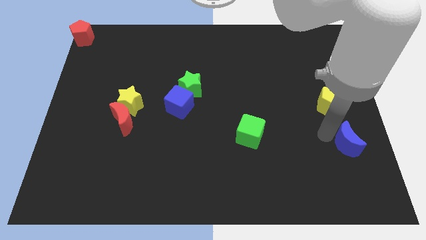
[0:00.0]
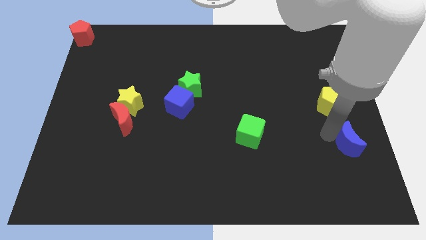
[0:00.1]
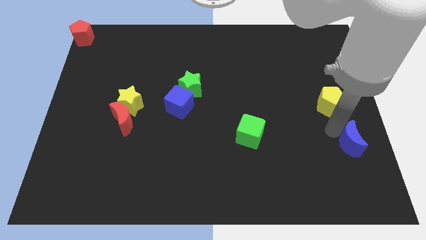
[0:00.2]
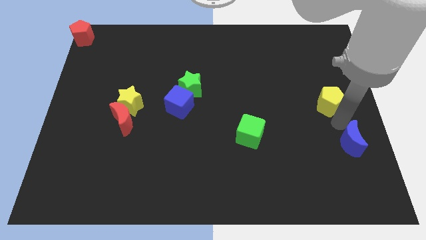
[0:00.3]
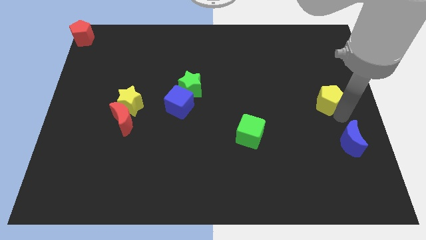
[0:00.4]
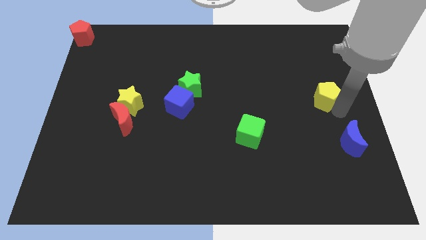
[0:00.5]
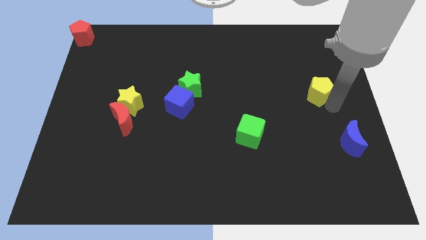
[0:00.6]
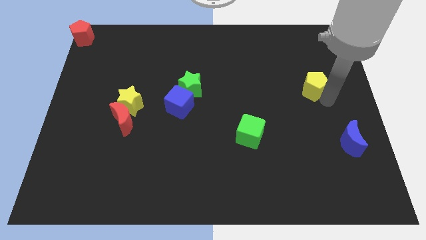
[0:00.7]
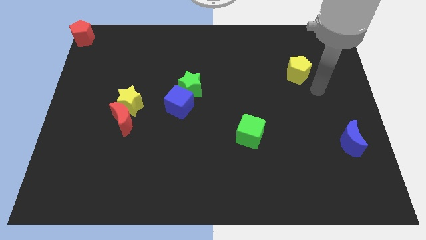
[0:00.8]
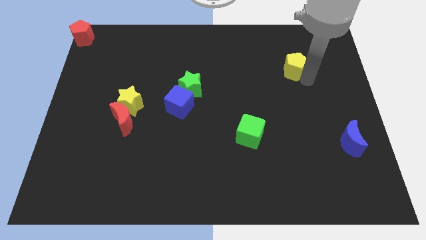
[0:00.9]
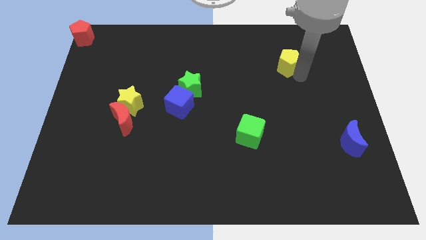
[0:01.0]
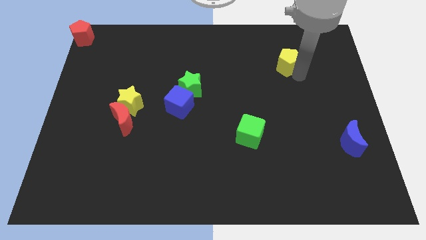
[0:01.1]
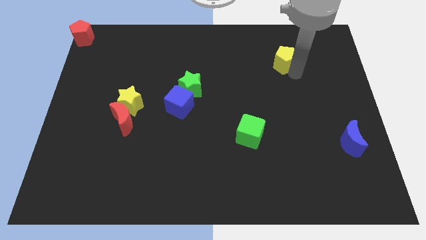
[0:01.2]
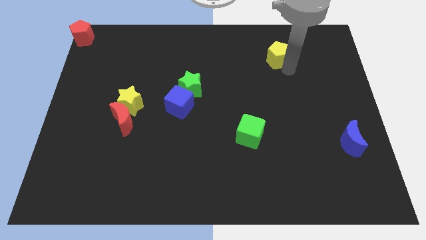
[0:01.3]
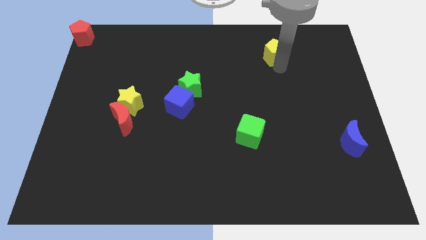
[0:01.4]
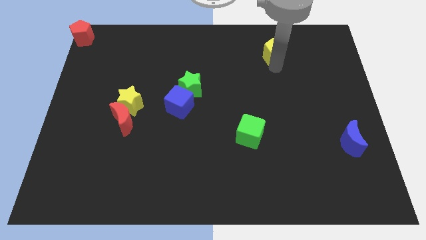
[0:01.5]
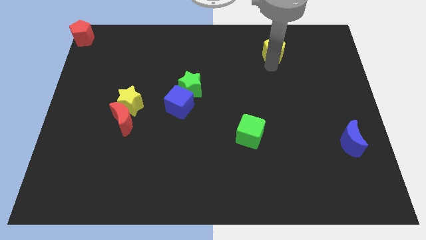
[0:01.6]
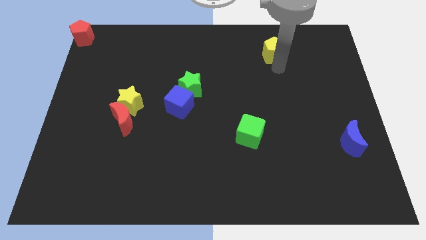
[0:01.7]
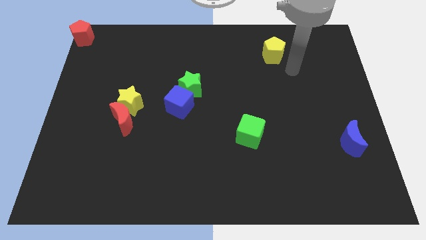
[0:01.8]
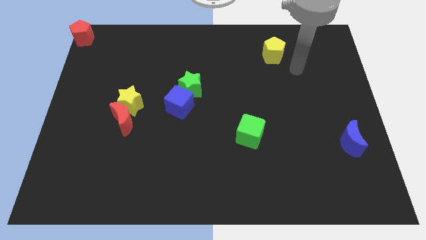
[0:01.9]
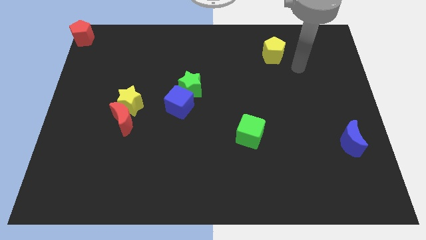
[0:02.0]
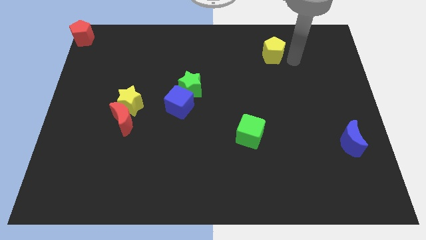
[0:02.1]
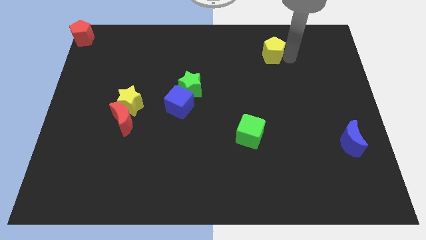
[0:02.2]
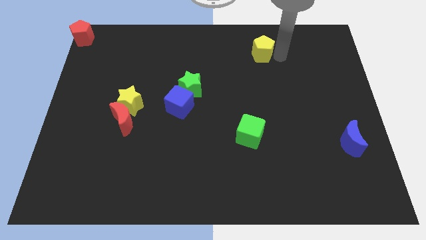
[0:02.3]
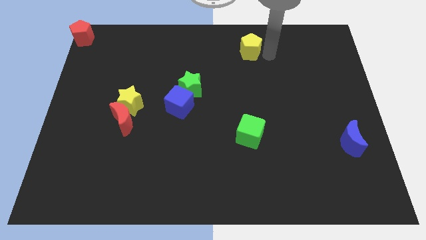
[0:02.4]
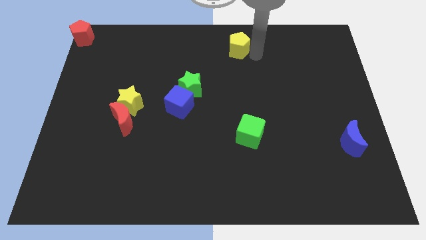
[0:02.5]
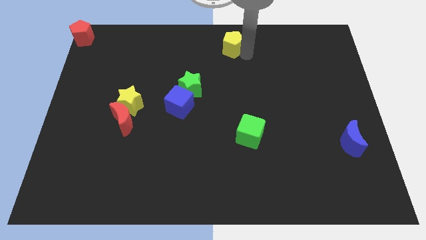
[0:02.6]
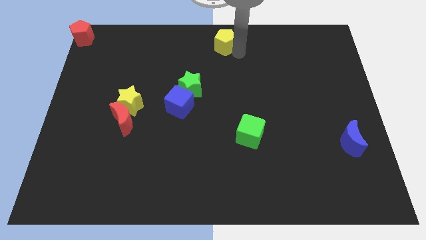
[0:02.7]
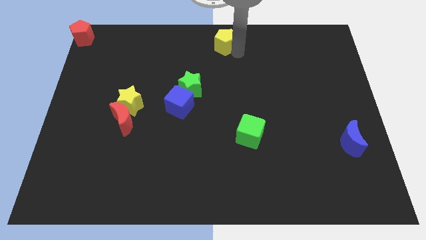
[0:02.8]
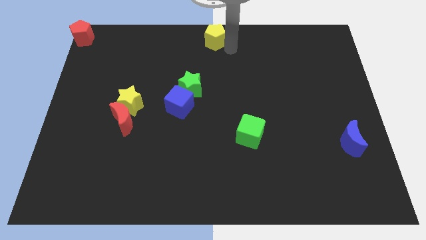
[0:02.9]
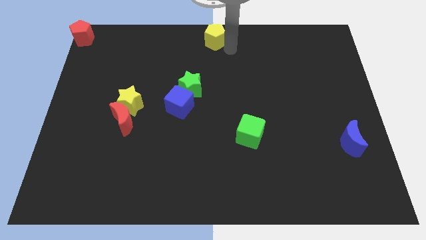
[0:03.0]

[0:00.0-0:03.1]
place the yellow pentagon at the top center of the board

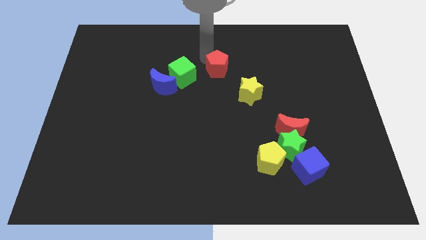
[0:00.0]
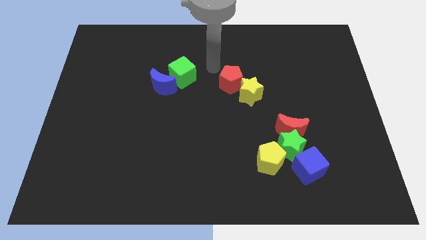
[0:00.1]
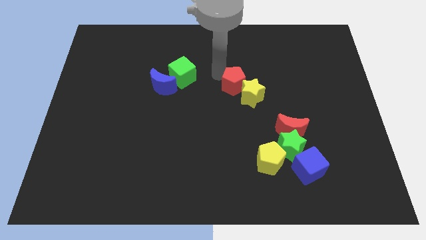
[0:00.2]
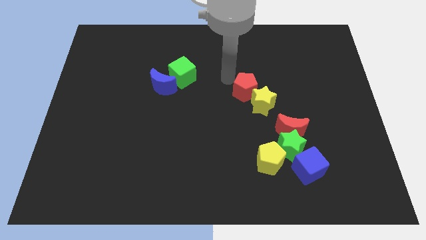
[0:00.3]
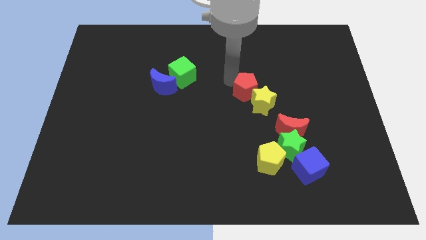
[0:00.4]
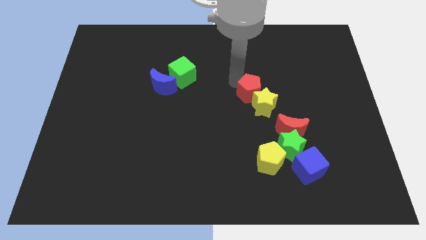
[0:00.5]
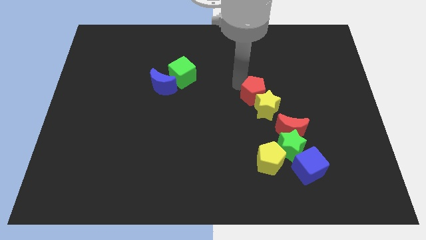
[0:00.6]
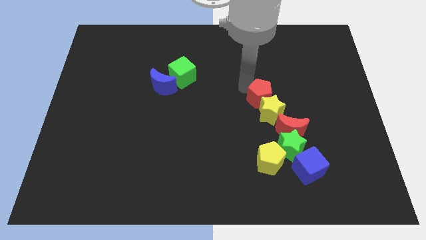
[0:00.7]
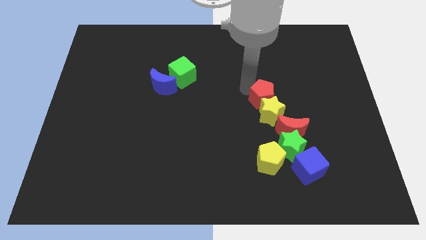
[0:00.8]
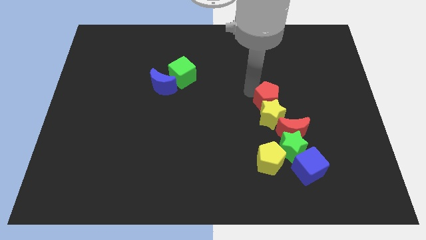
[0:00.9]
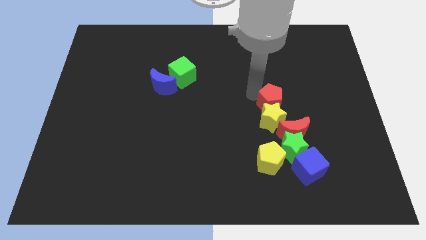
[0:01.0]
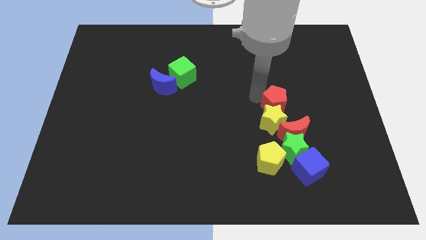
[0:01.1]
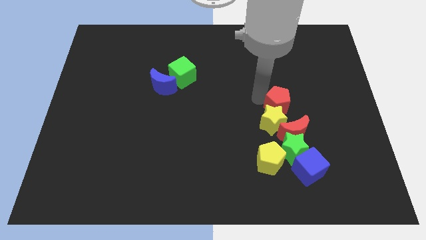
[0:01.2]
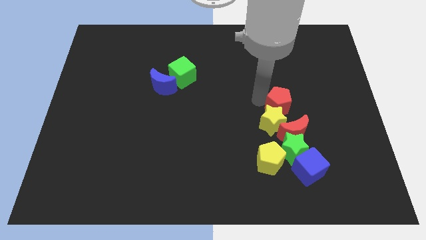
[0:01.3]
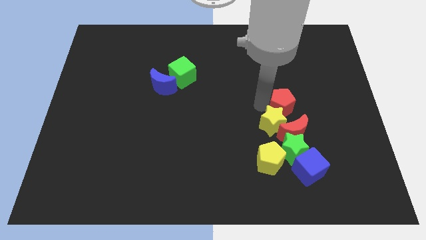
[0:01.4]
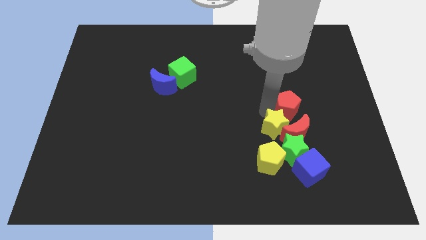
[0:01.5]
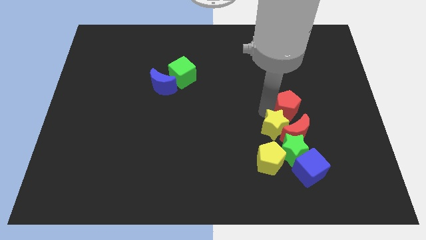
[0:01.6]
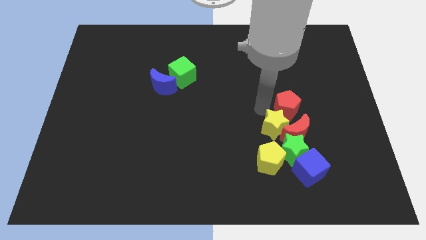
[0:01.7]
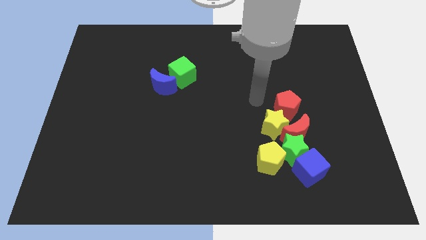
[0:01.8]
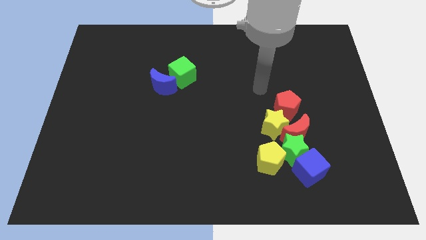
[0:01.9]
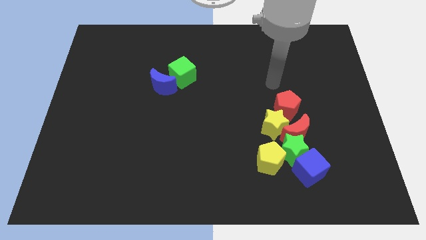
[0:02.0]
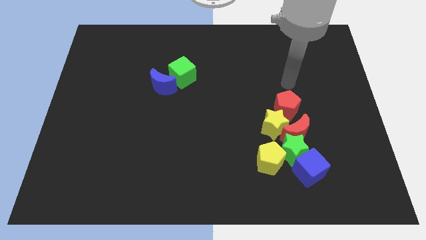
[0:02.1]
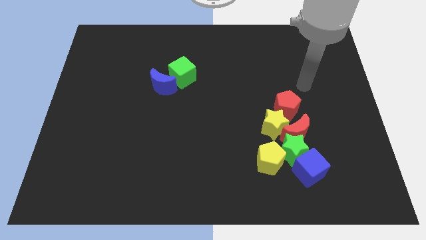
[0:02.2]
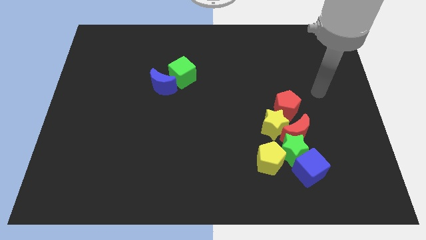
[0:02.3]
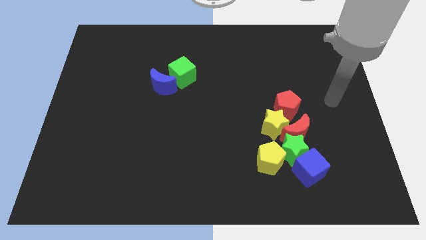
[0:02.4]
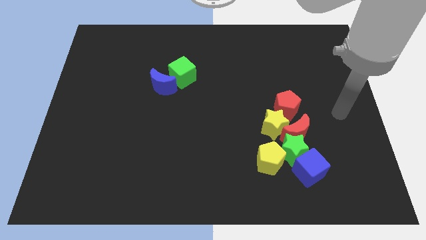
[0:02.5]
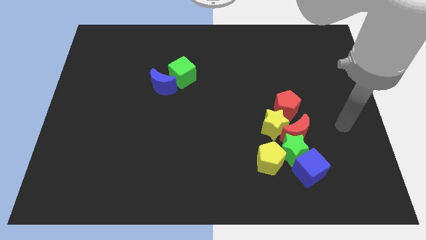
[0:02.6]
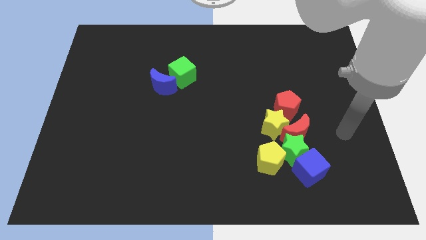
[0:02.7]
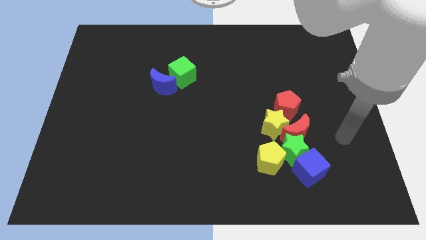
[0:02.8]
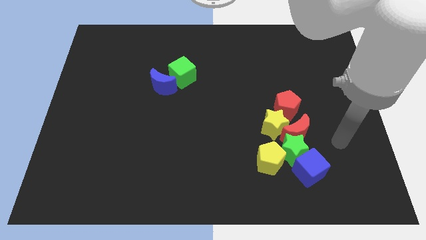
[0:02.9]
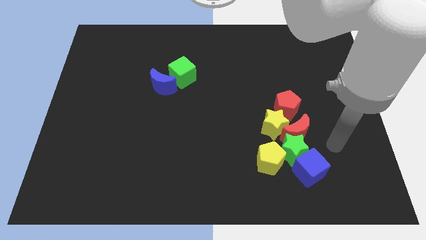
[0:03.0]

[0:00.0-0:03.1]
slide red pentagon above the red moon

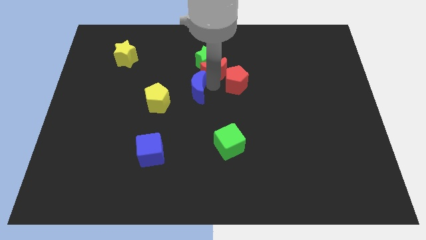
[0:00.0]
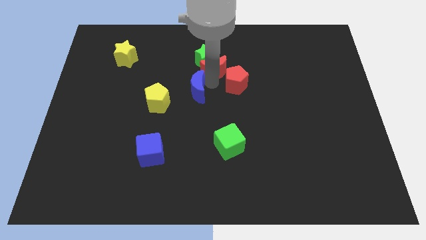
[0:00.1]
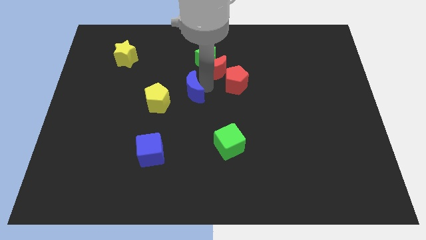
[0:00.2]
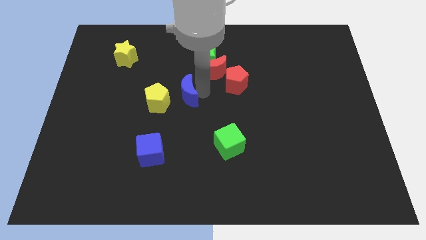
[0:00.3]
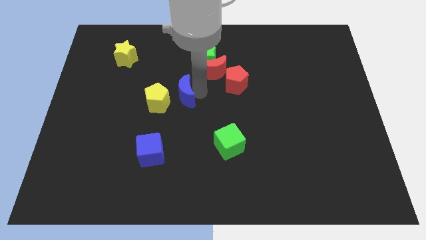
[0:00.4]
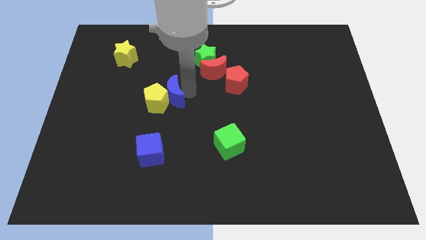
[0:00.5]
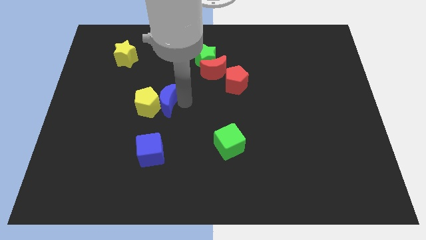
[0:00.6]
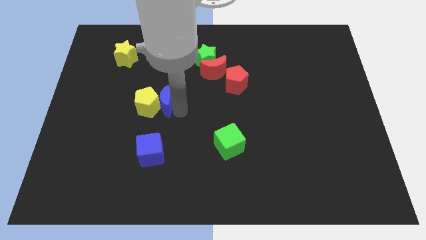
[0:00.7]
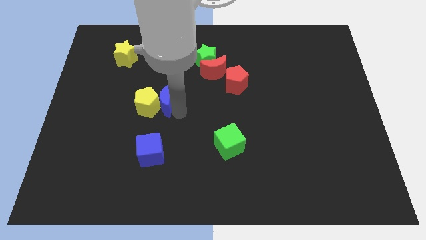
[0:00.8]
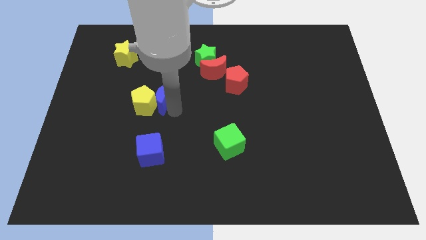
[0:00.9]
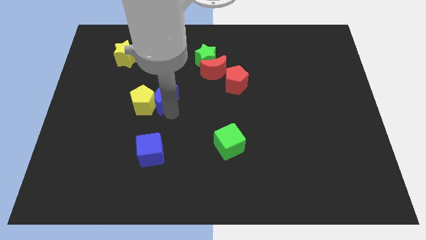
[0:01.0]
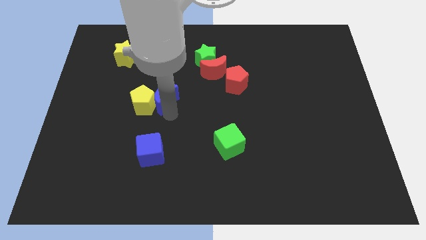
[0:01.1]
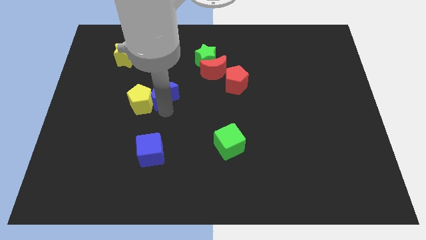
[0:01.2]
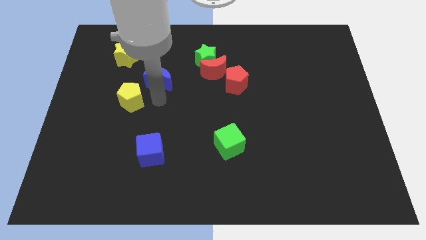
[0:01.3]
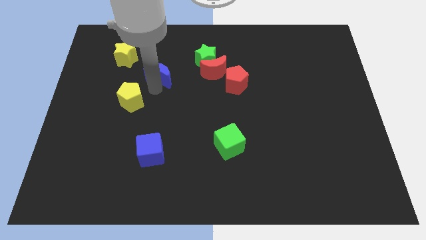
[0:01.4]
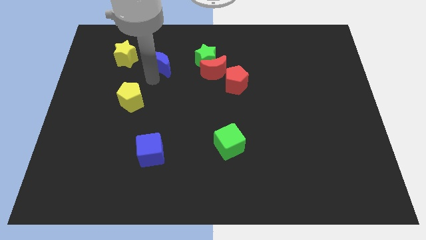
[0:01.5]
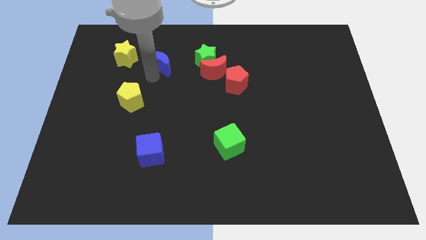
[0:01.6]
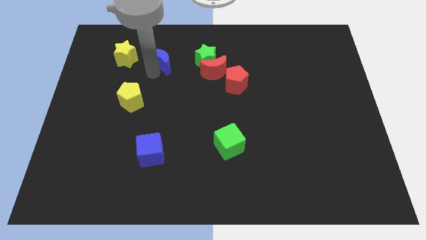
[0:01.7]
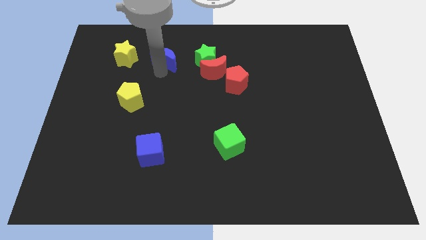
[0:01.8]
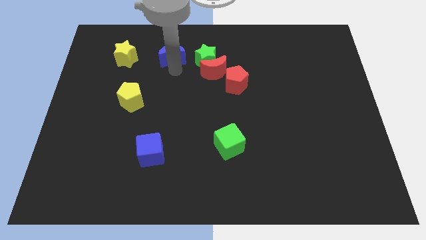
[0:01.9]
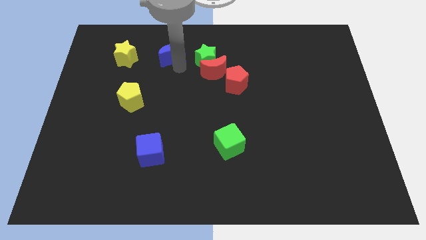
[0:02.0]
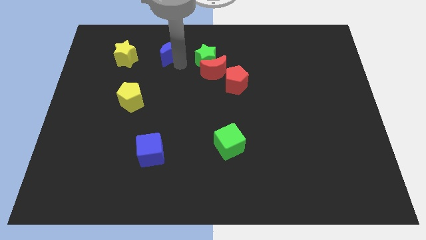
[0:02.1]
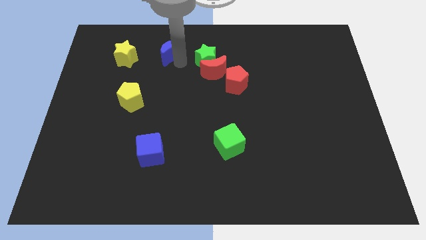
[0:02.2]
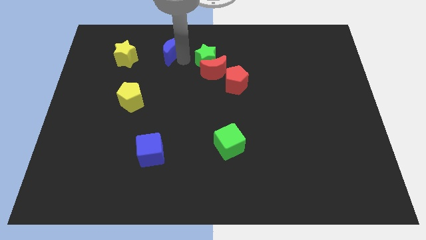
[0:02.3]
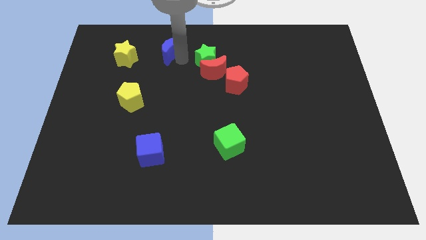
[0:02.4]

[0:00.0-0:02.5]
place the blue moon right to the yellow star

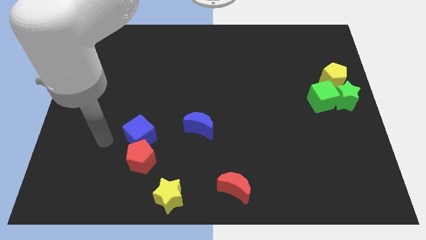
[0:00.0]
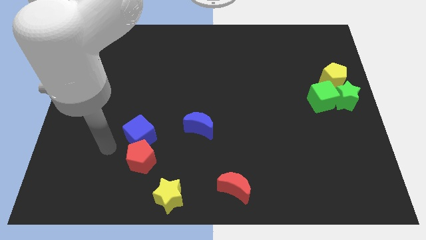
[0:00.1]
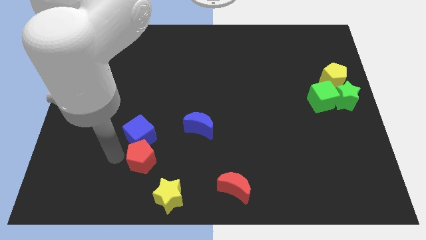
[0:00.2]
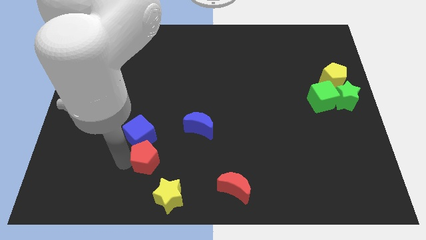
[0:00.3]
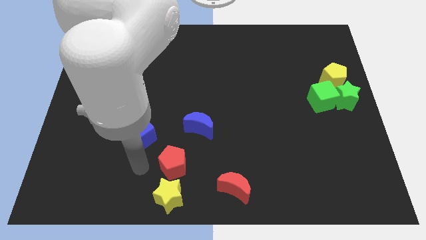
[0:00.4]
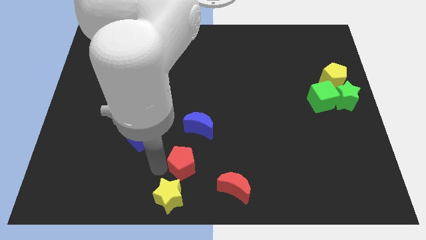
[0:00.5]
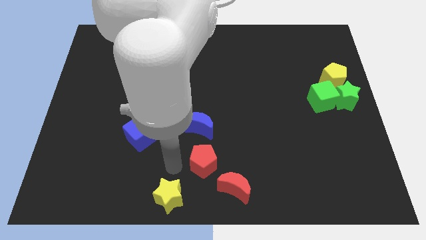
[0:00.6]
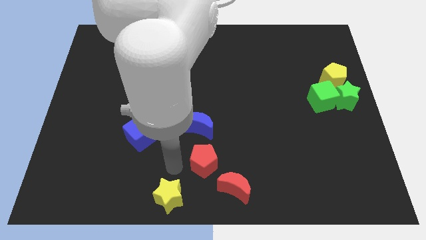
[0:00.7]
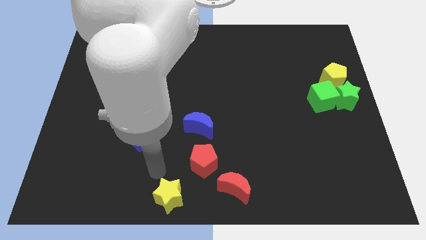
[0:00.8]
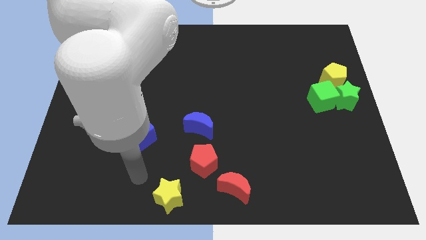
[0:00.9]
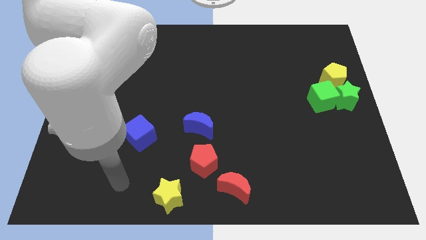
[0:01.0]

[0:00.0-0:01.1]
place the red pentagon above the red moon
